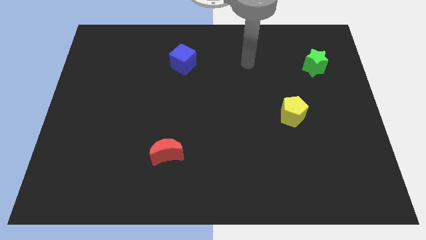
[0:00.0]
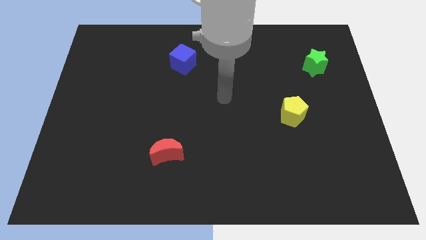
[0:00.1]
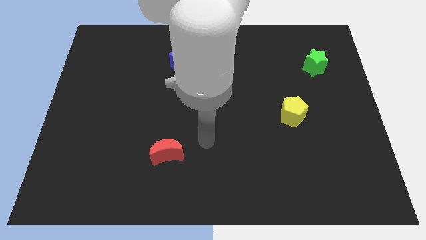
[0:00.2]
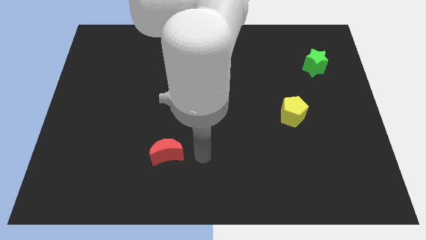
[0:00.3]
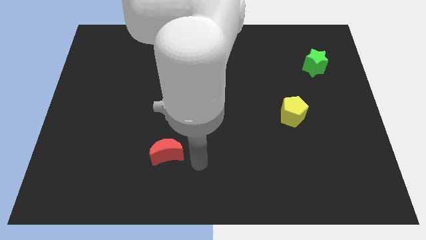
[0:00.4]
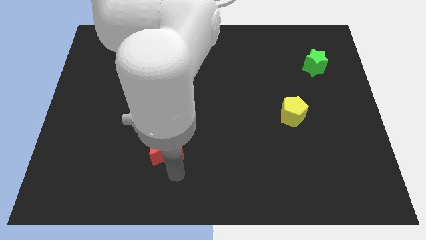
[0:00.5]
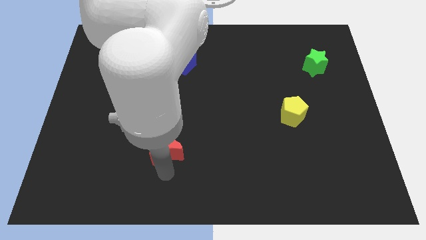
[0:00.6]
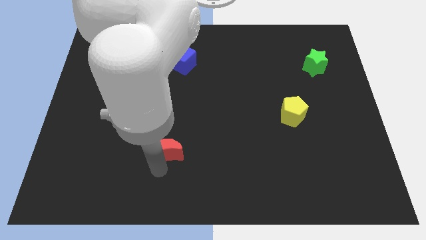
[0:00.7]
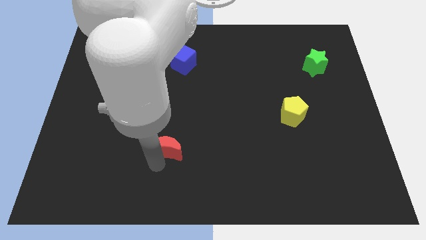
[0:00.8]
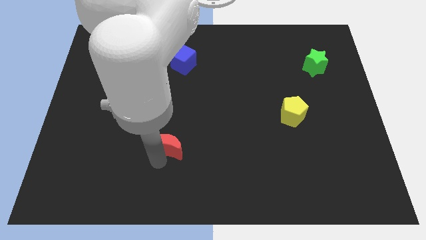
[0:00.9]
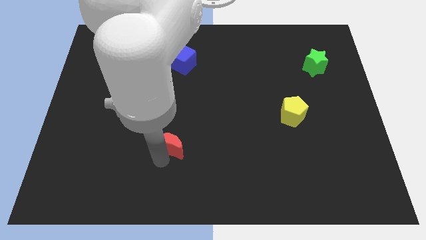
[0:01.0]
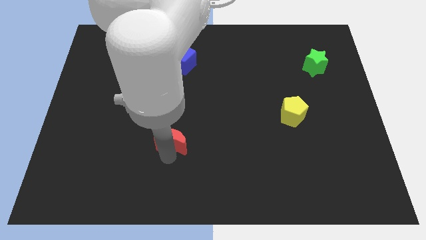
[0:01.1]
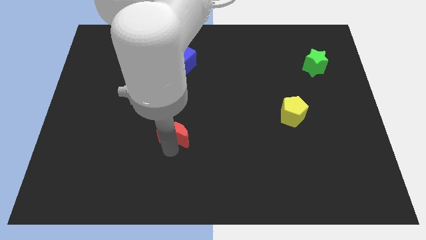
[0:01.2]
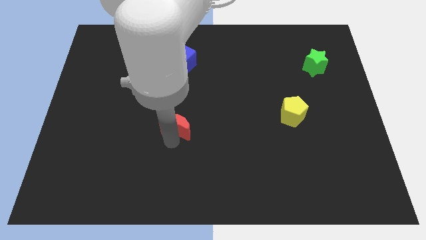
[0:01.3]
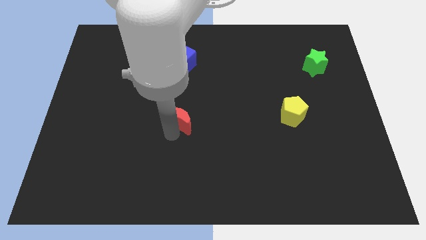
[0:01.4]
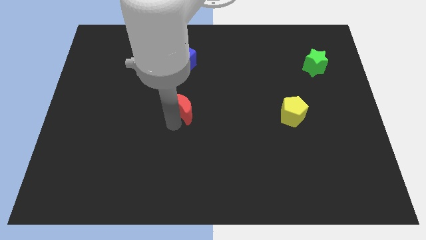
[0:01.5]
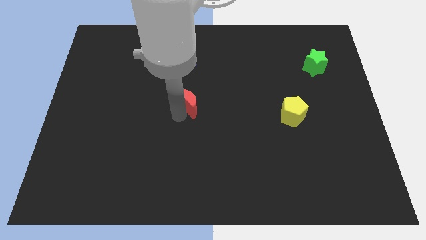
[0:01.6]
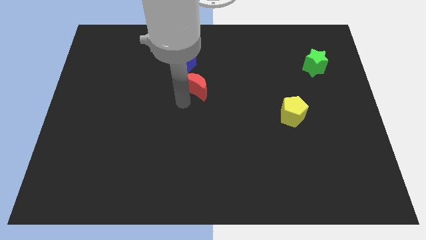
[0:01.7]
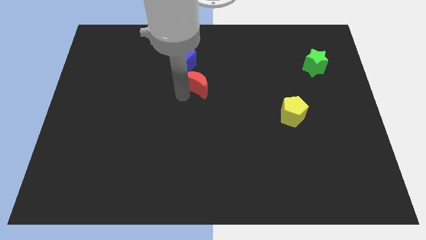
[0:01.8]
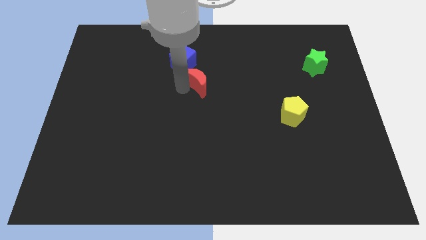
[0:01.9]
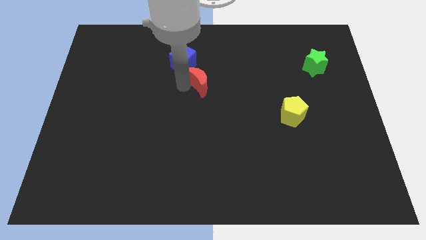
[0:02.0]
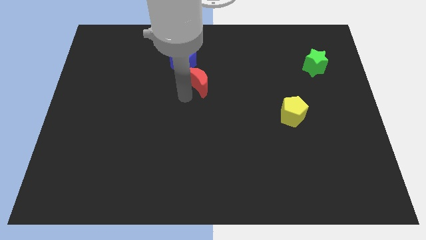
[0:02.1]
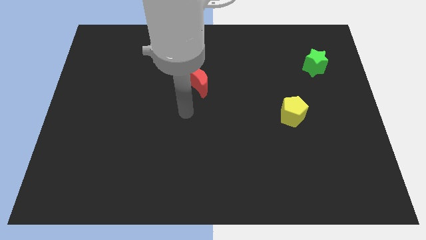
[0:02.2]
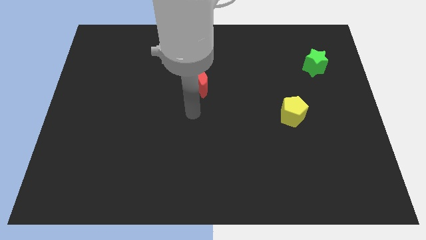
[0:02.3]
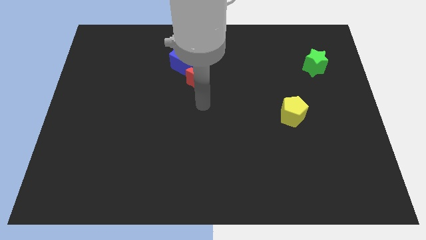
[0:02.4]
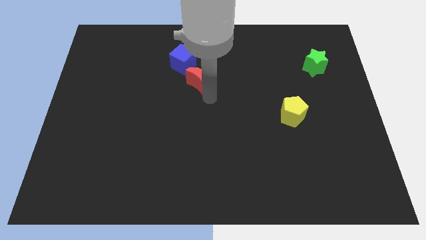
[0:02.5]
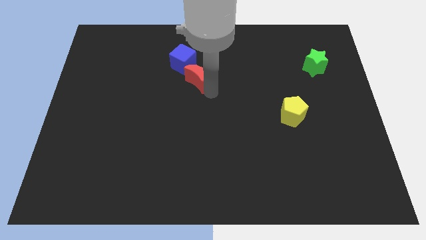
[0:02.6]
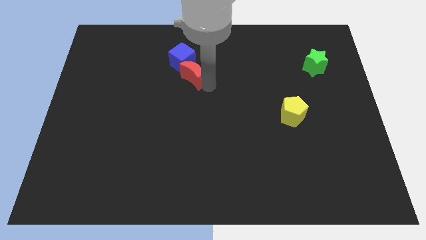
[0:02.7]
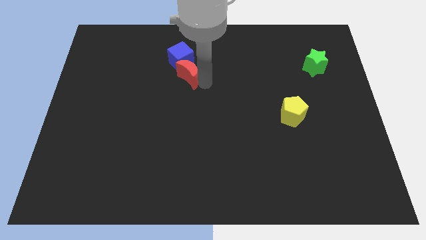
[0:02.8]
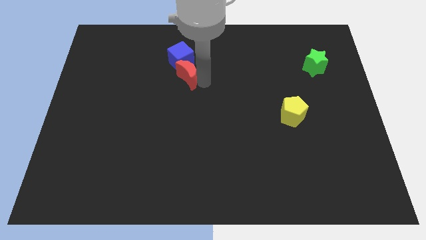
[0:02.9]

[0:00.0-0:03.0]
put the moon to the cube

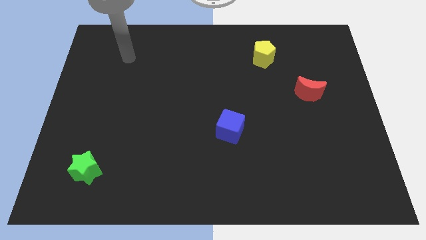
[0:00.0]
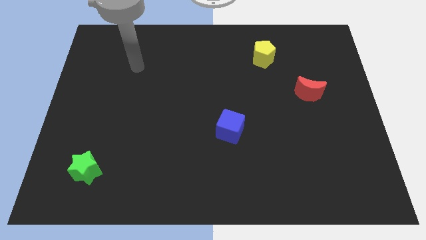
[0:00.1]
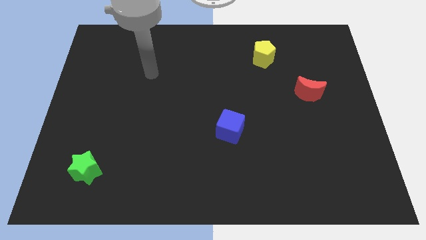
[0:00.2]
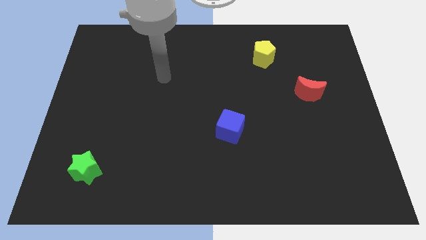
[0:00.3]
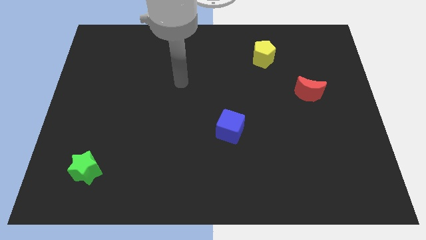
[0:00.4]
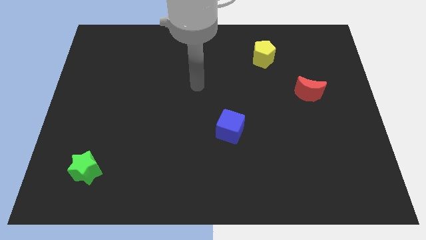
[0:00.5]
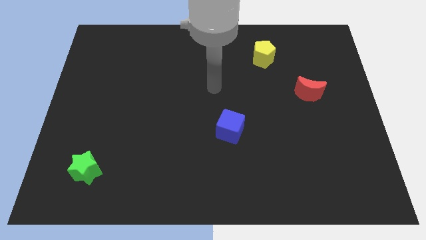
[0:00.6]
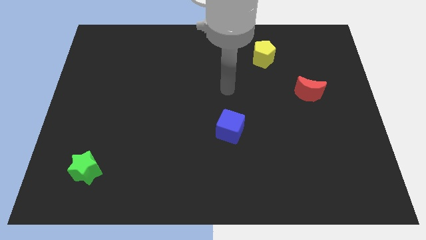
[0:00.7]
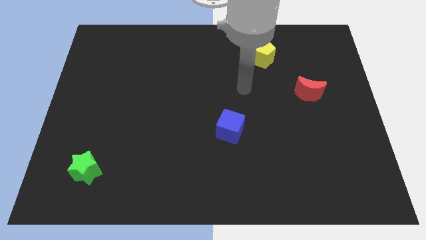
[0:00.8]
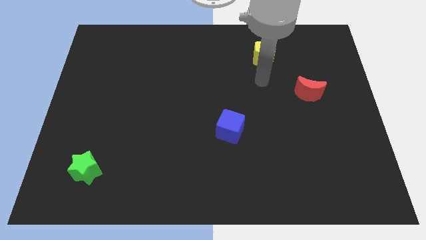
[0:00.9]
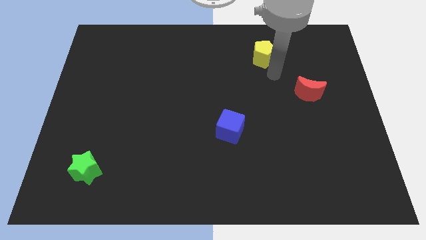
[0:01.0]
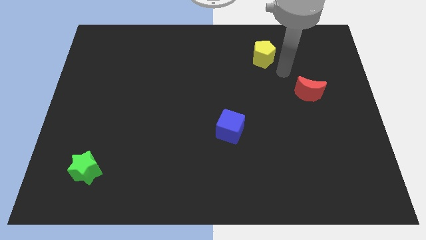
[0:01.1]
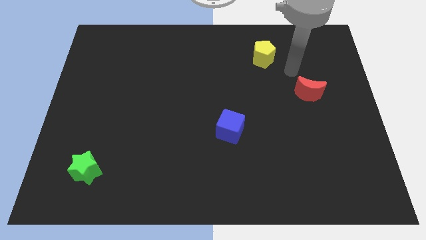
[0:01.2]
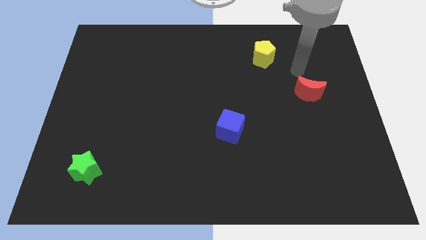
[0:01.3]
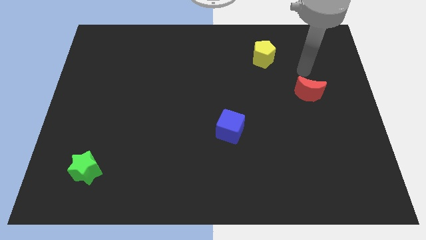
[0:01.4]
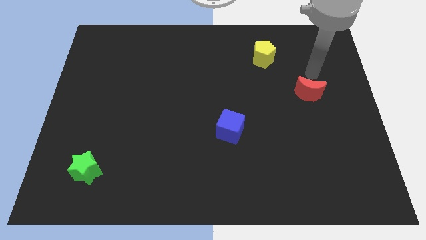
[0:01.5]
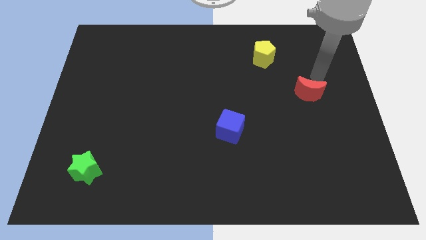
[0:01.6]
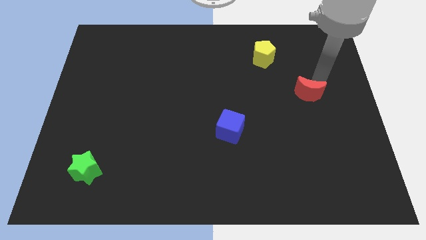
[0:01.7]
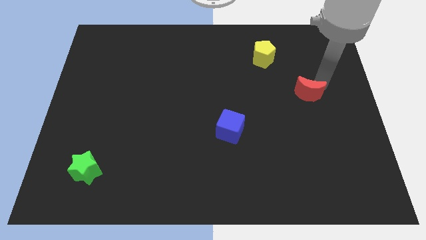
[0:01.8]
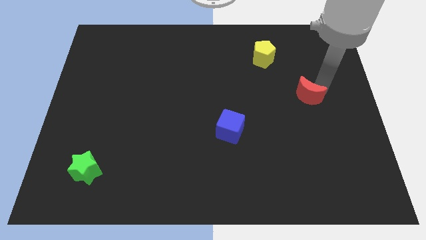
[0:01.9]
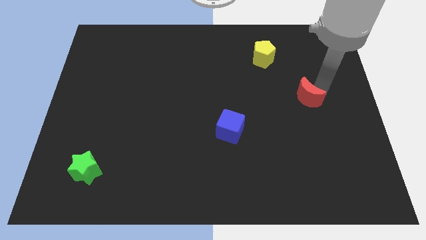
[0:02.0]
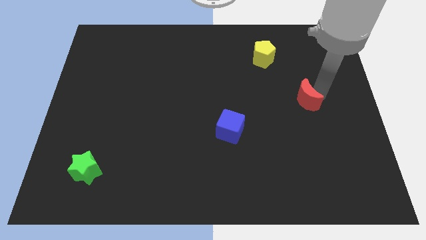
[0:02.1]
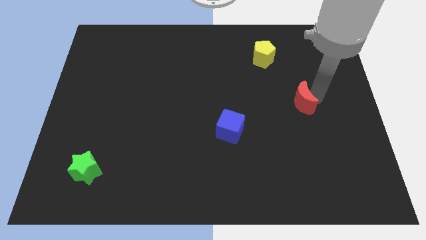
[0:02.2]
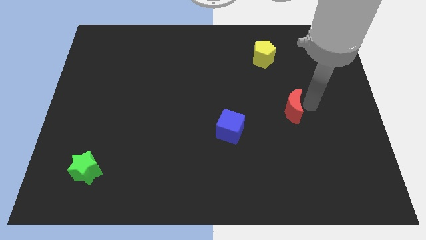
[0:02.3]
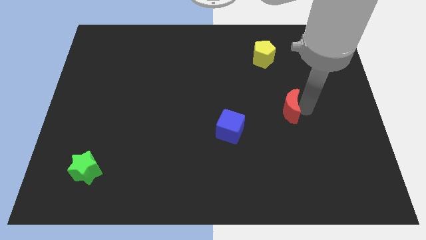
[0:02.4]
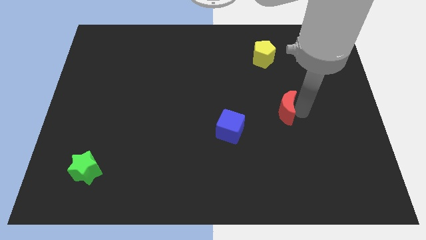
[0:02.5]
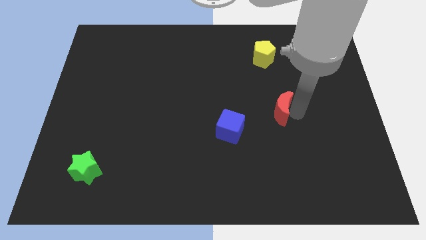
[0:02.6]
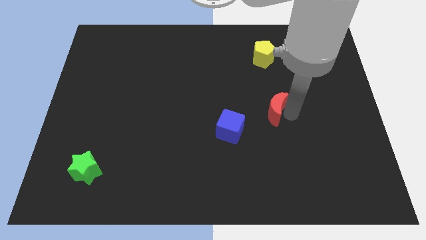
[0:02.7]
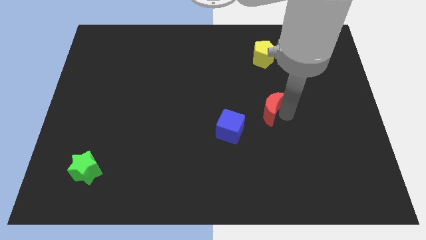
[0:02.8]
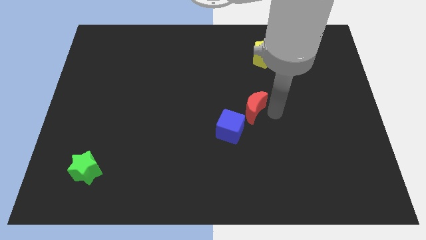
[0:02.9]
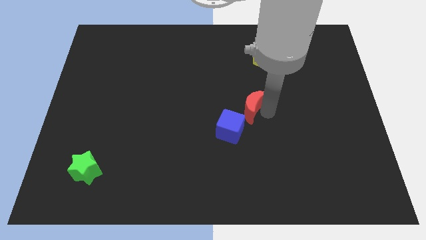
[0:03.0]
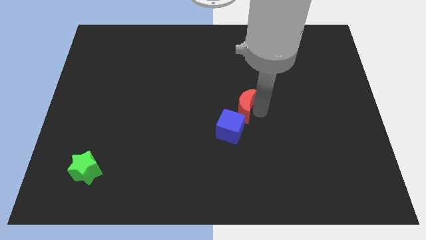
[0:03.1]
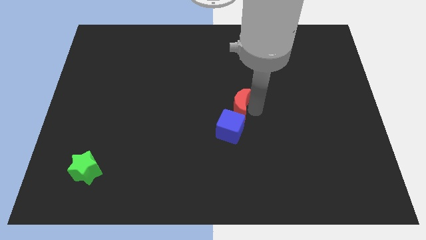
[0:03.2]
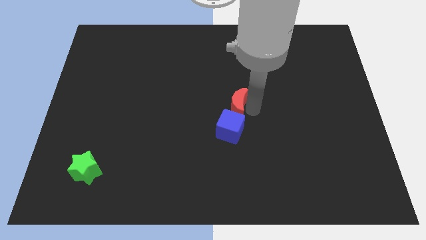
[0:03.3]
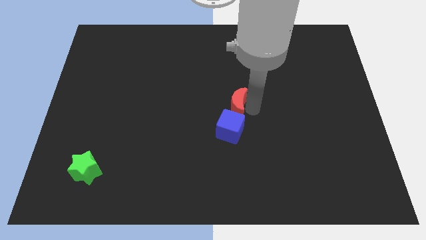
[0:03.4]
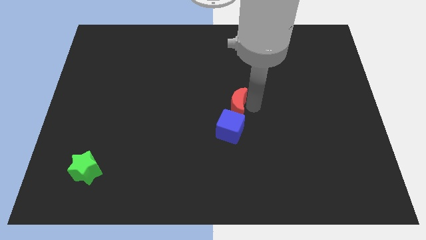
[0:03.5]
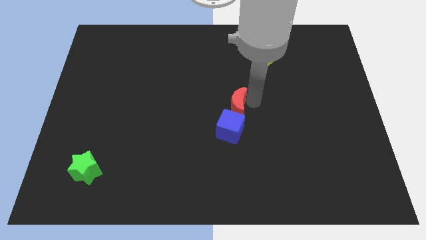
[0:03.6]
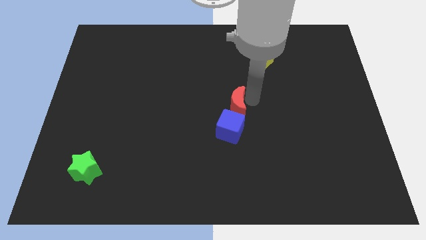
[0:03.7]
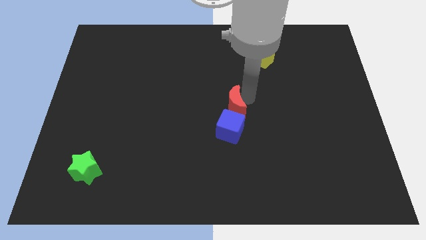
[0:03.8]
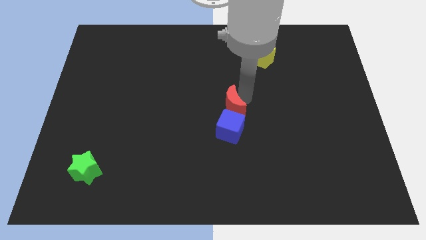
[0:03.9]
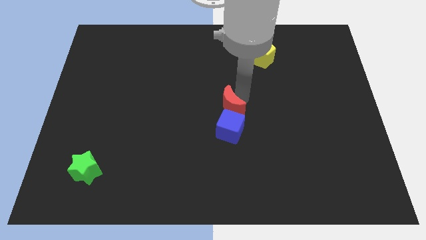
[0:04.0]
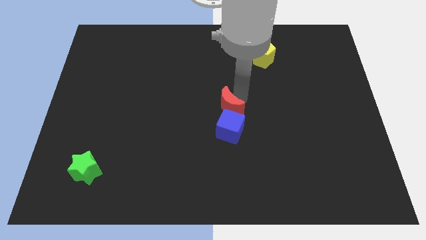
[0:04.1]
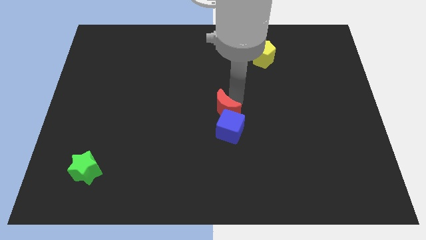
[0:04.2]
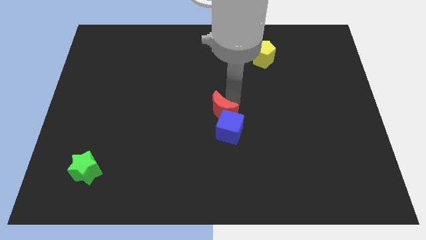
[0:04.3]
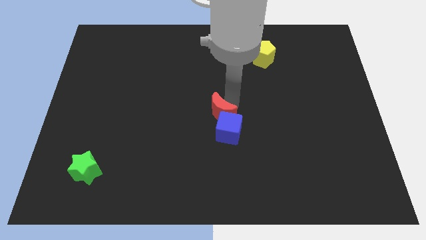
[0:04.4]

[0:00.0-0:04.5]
move the moon to the blue block

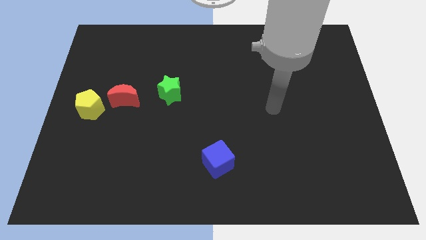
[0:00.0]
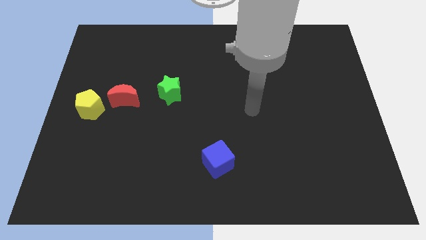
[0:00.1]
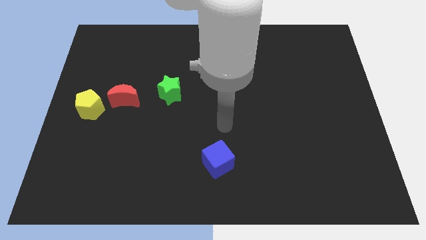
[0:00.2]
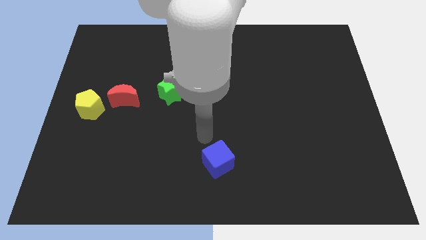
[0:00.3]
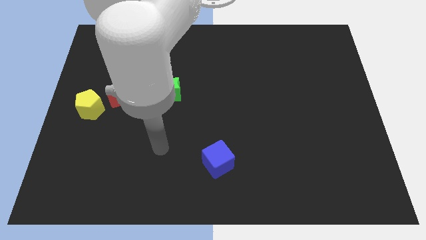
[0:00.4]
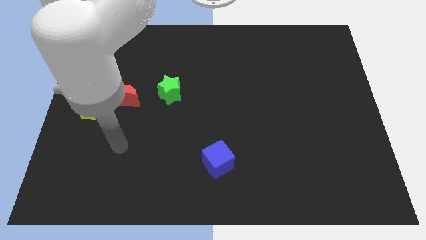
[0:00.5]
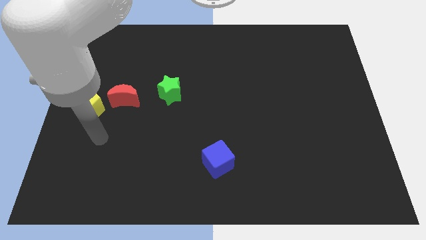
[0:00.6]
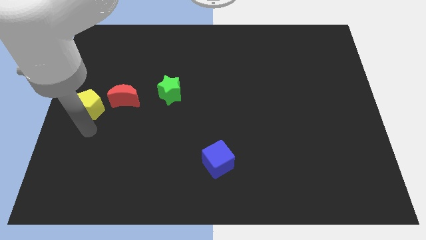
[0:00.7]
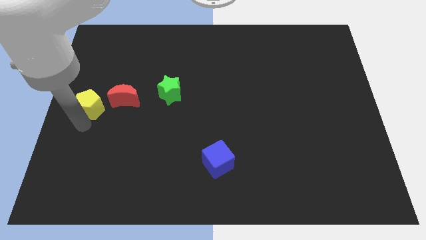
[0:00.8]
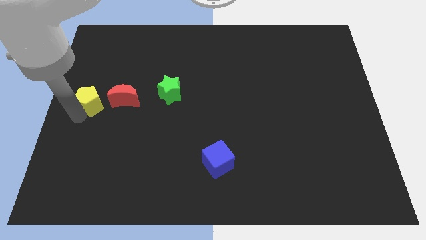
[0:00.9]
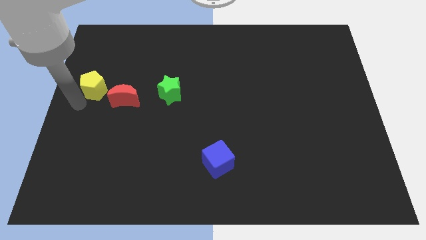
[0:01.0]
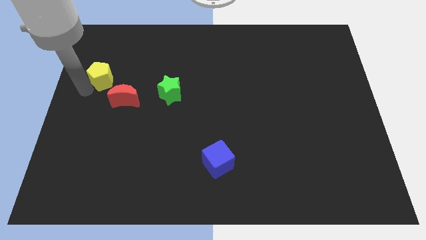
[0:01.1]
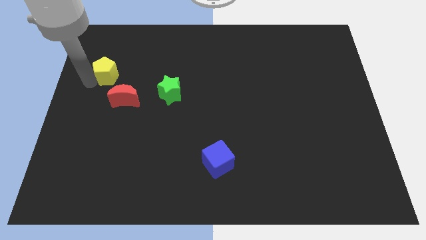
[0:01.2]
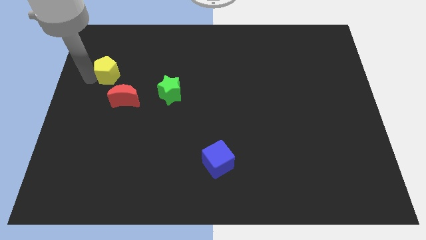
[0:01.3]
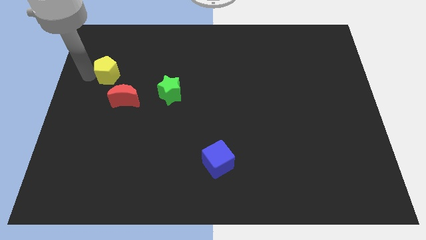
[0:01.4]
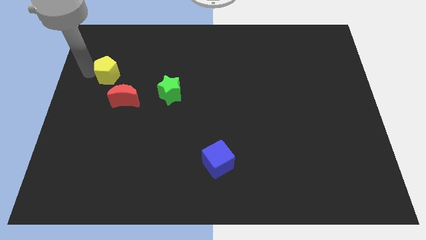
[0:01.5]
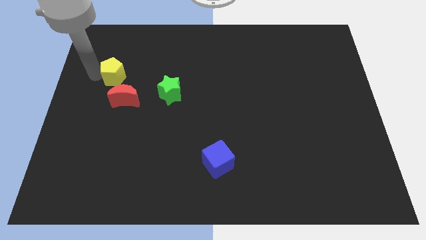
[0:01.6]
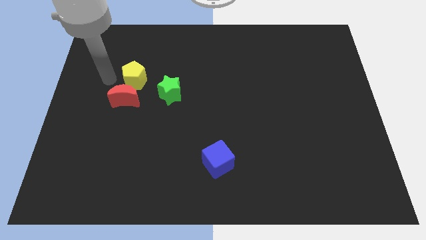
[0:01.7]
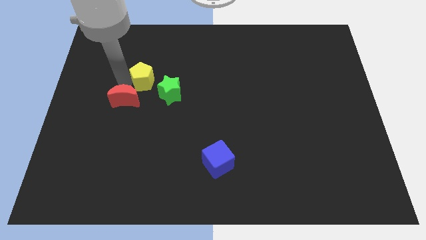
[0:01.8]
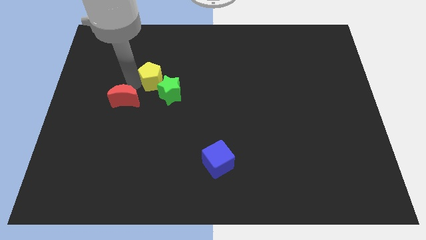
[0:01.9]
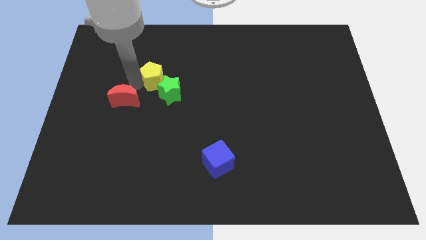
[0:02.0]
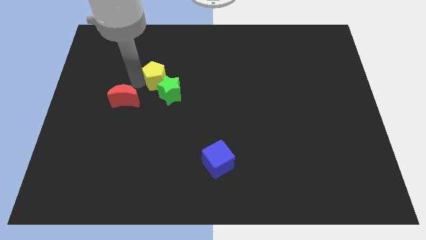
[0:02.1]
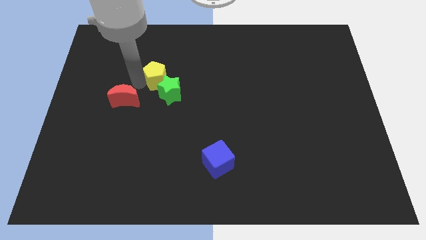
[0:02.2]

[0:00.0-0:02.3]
put the yellow pentagon towards the star
